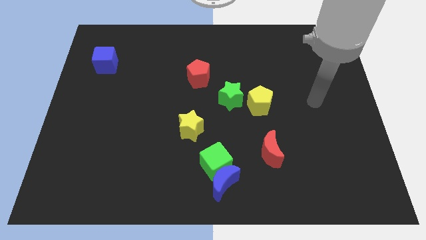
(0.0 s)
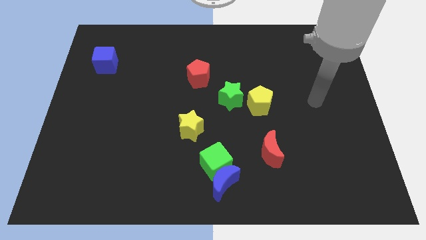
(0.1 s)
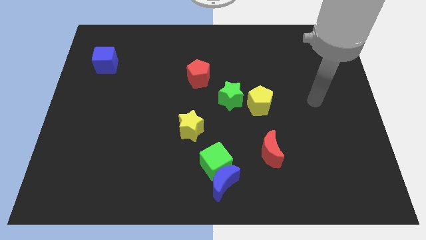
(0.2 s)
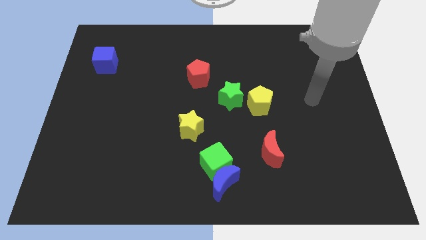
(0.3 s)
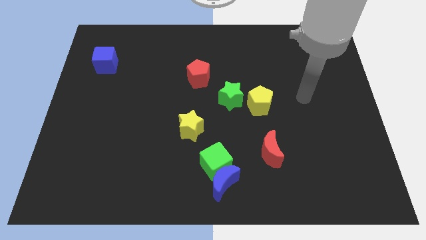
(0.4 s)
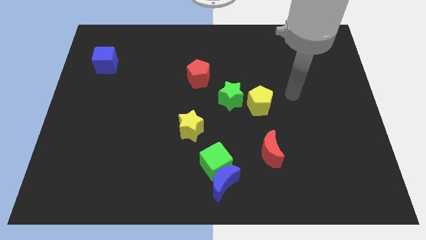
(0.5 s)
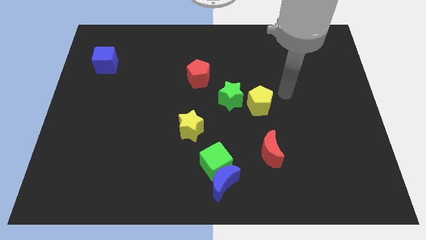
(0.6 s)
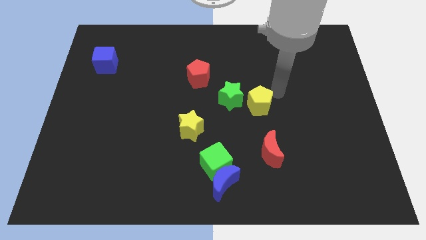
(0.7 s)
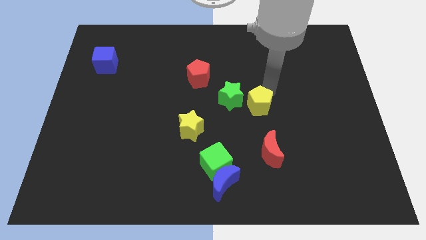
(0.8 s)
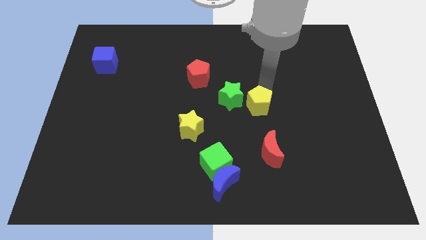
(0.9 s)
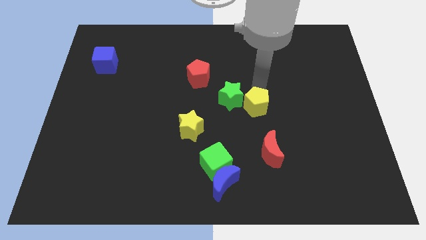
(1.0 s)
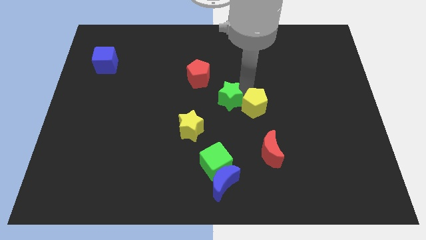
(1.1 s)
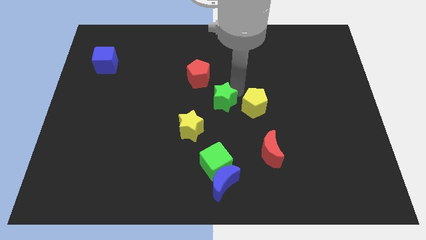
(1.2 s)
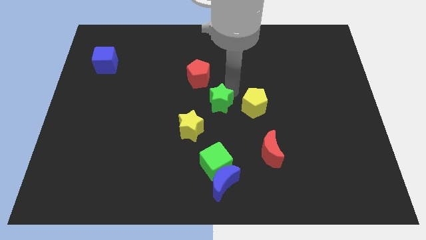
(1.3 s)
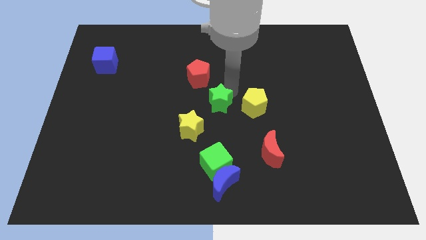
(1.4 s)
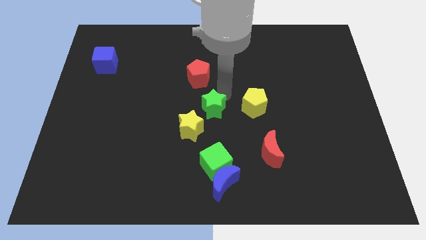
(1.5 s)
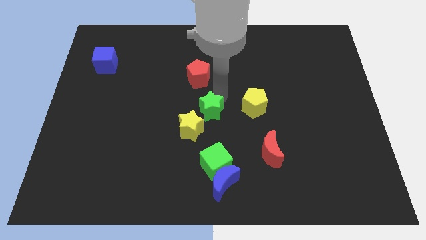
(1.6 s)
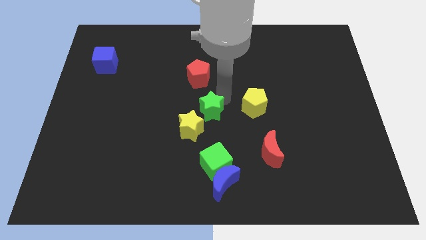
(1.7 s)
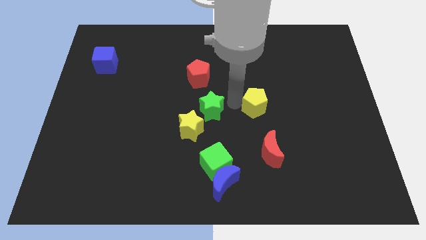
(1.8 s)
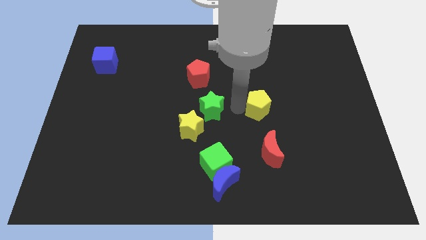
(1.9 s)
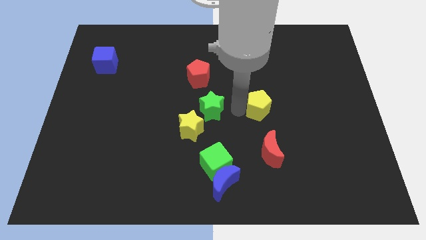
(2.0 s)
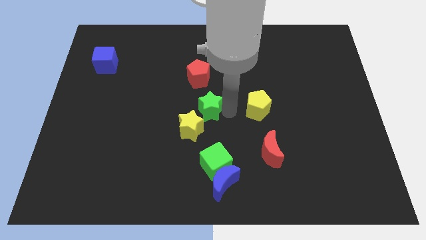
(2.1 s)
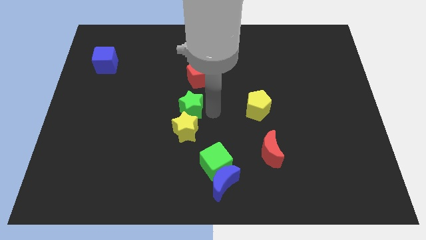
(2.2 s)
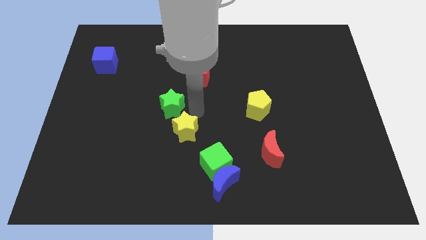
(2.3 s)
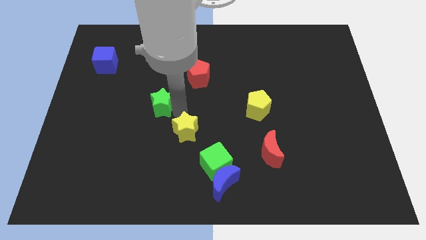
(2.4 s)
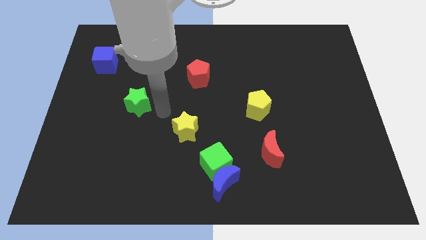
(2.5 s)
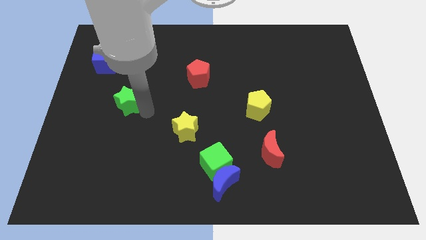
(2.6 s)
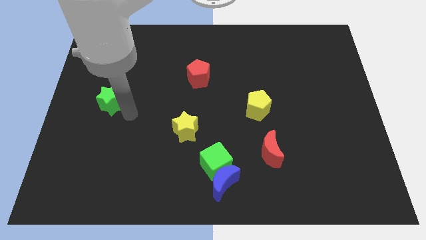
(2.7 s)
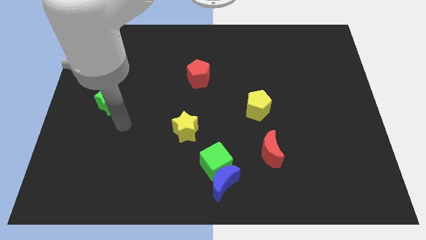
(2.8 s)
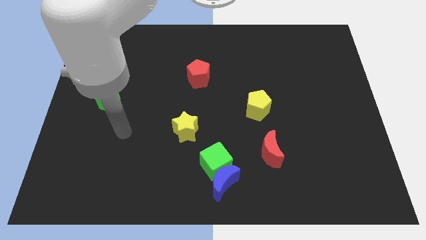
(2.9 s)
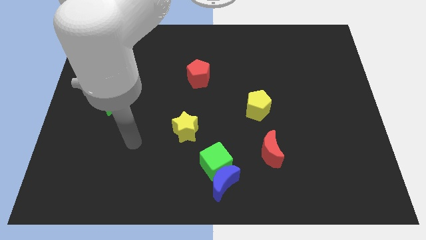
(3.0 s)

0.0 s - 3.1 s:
separate green star from yellow pentagon

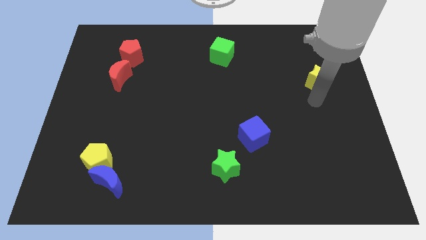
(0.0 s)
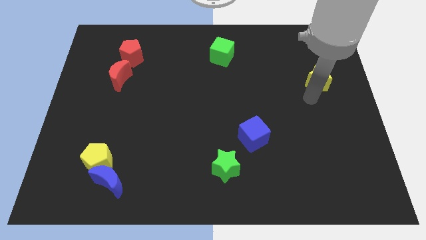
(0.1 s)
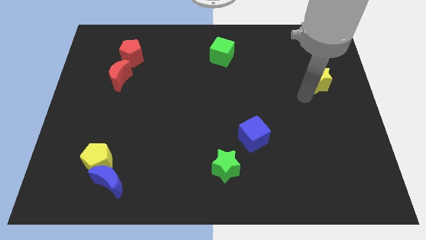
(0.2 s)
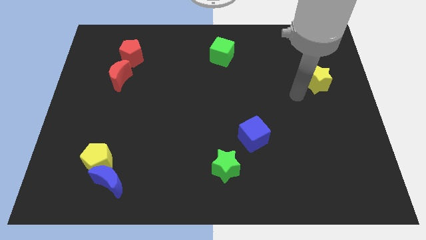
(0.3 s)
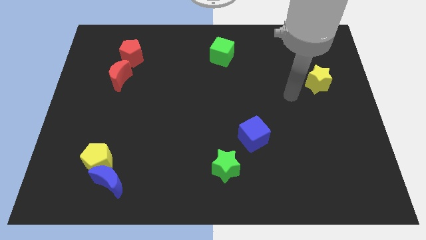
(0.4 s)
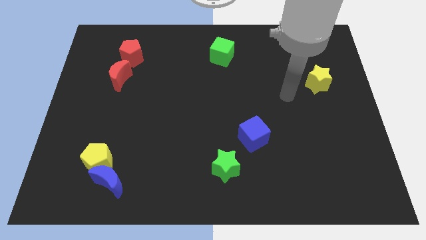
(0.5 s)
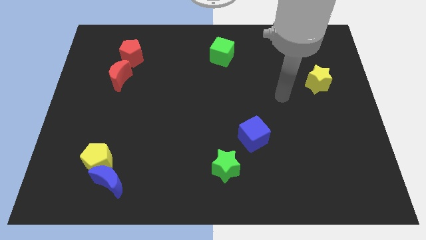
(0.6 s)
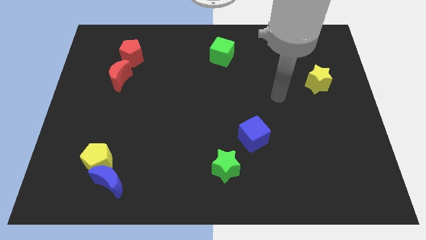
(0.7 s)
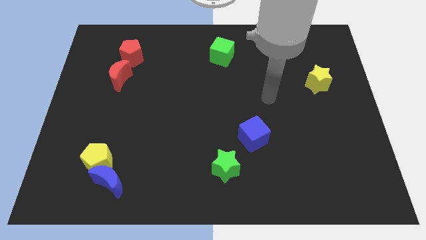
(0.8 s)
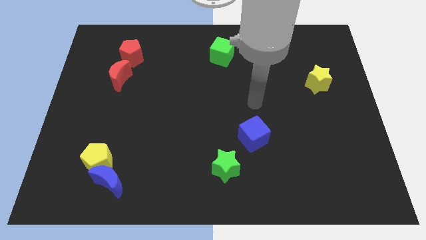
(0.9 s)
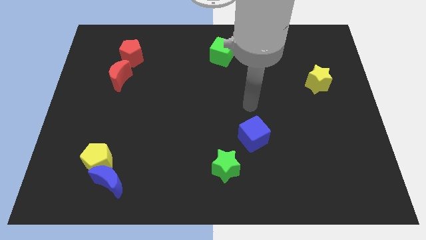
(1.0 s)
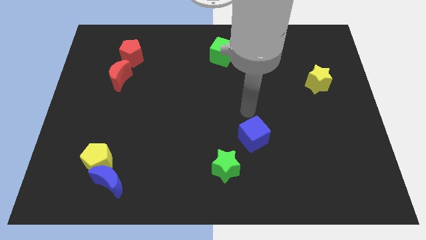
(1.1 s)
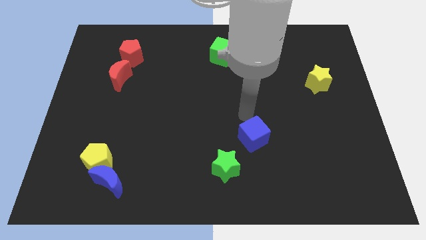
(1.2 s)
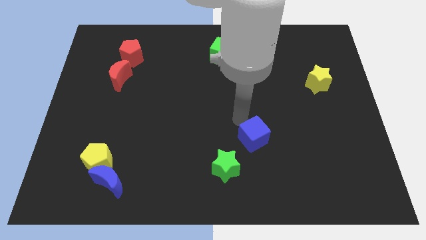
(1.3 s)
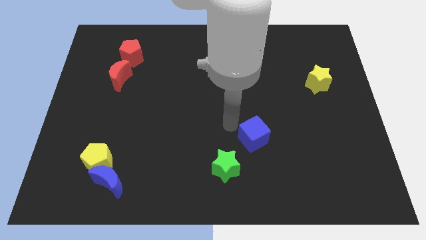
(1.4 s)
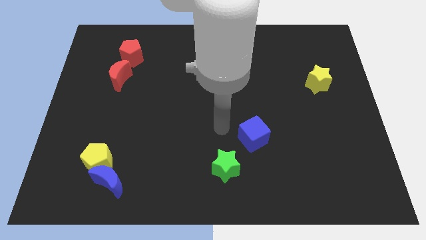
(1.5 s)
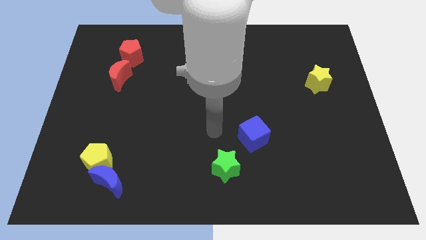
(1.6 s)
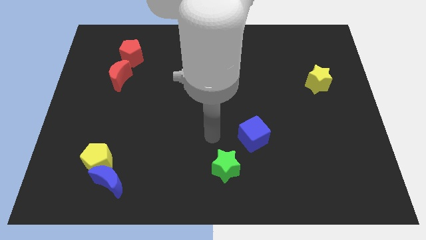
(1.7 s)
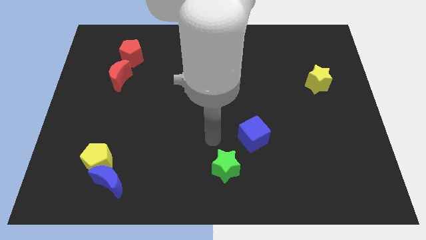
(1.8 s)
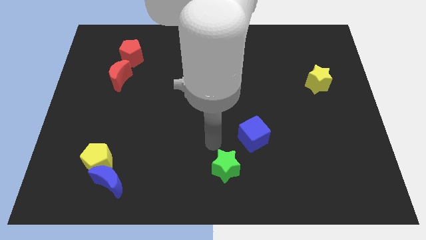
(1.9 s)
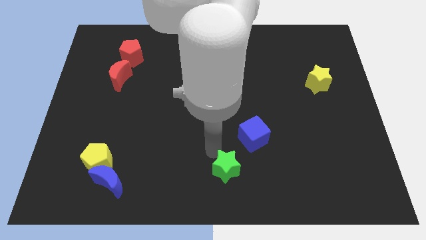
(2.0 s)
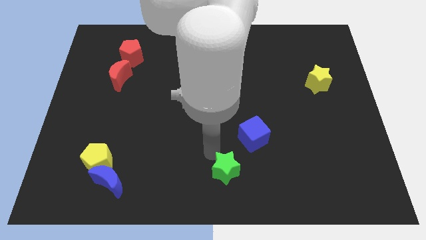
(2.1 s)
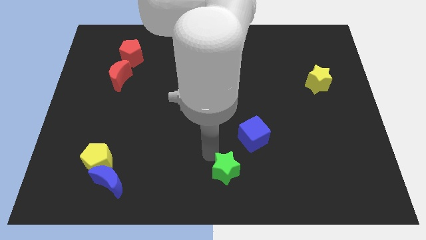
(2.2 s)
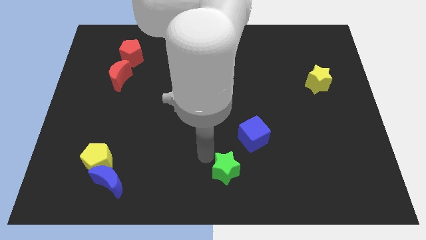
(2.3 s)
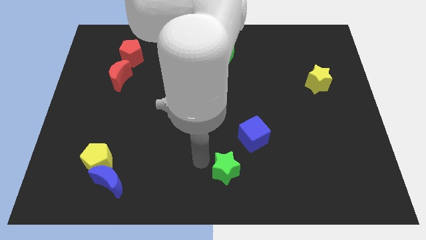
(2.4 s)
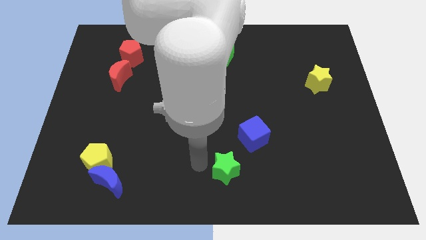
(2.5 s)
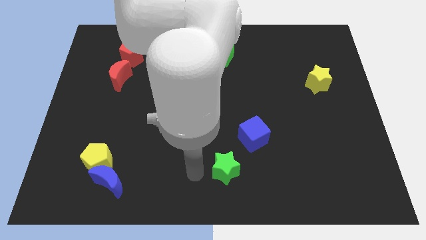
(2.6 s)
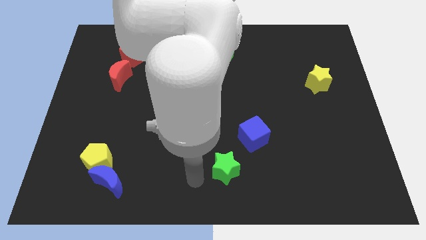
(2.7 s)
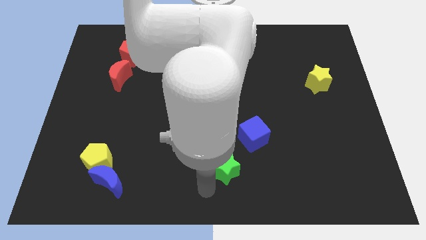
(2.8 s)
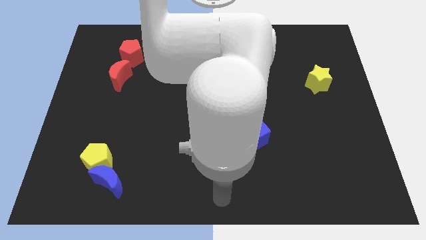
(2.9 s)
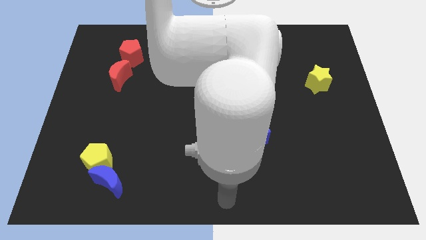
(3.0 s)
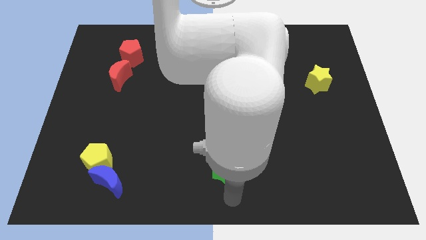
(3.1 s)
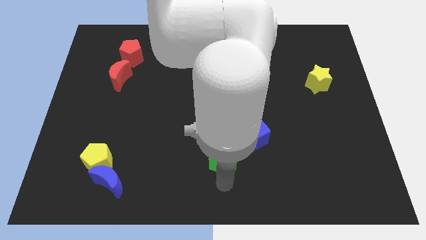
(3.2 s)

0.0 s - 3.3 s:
place the hand at the bottom of the green star

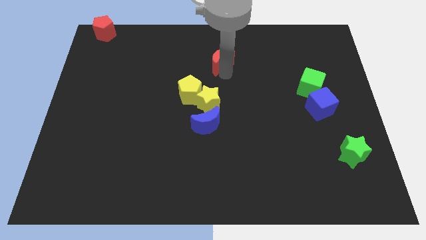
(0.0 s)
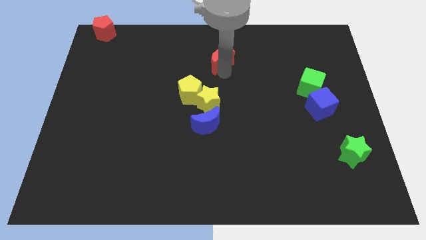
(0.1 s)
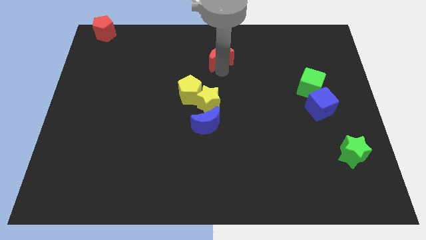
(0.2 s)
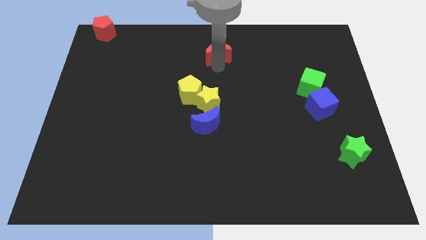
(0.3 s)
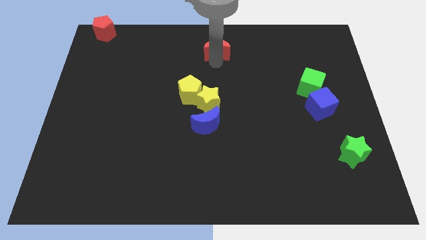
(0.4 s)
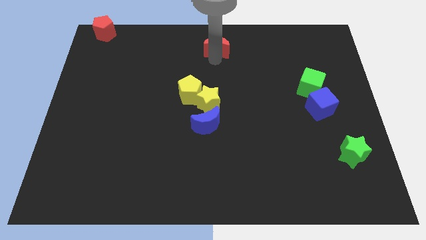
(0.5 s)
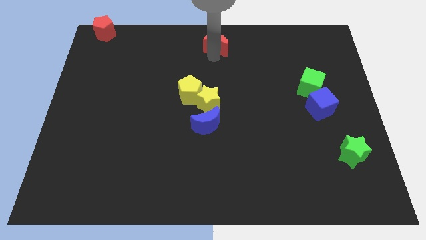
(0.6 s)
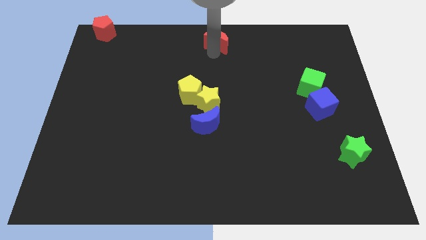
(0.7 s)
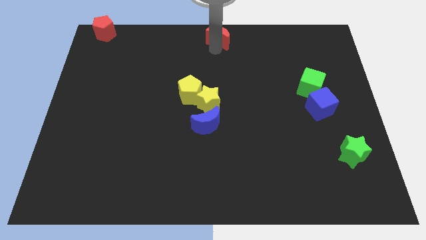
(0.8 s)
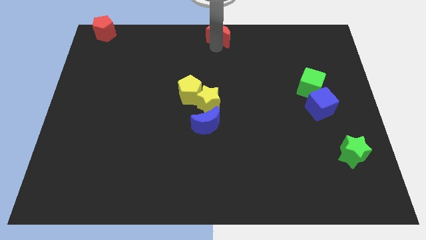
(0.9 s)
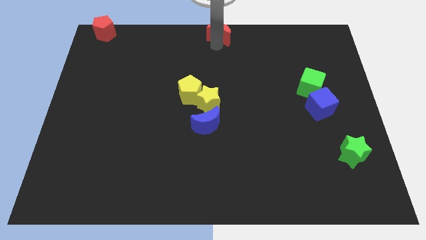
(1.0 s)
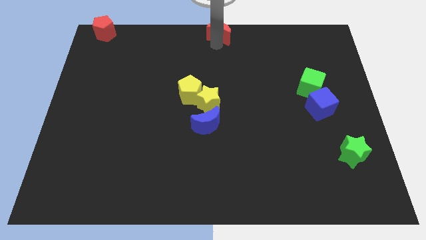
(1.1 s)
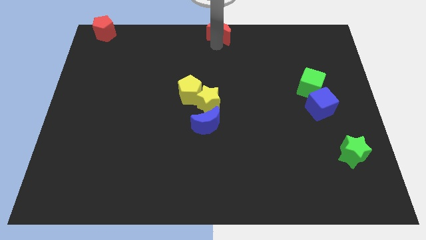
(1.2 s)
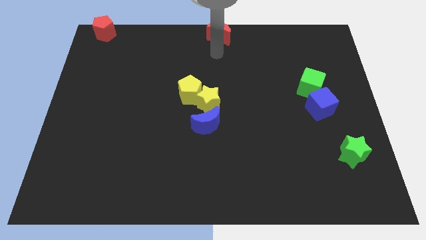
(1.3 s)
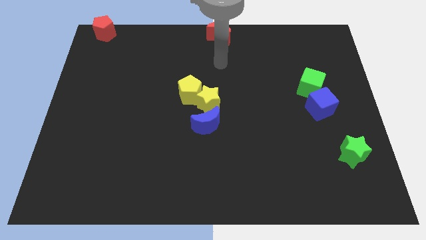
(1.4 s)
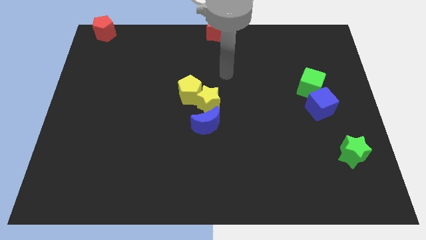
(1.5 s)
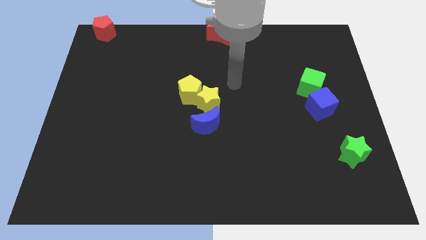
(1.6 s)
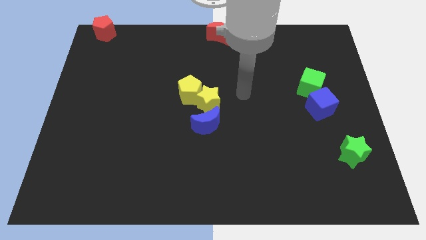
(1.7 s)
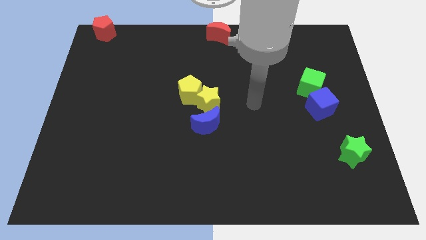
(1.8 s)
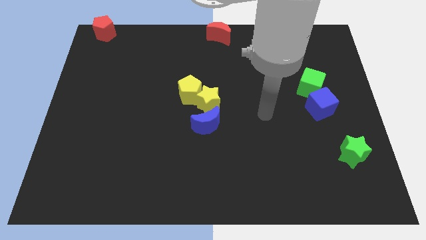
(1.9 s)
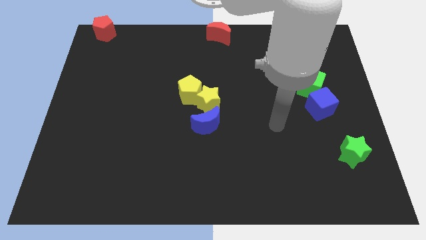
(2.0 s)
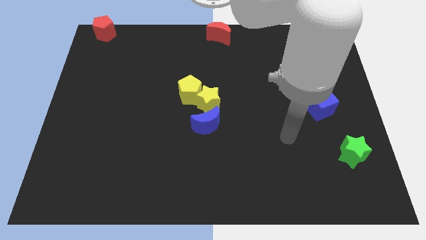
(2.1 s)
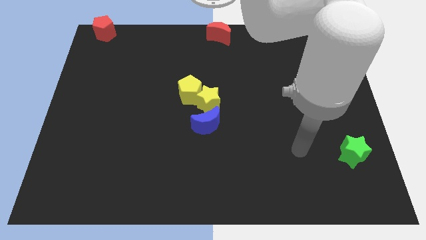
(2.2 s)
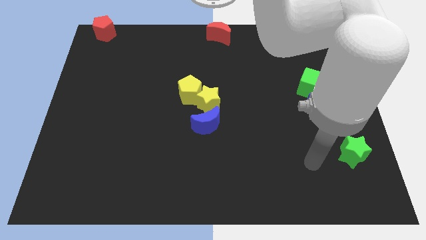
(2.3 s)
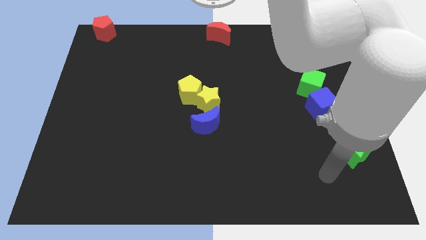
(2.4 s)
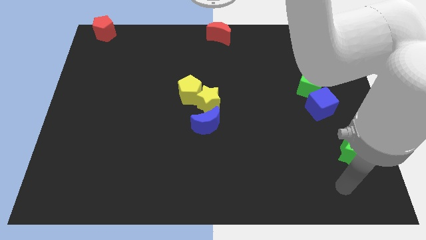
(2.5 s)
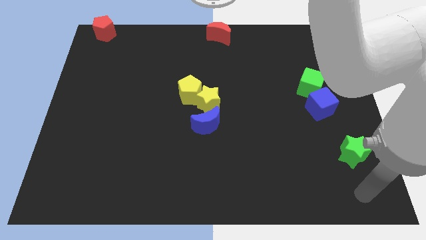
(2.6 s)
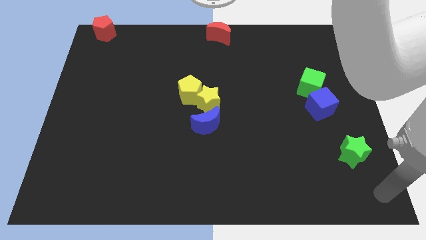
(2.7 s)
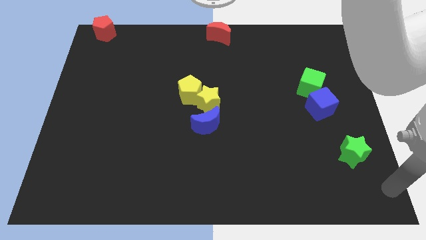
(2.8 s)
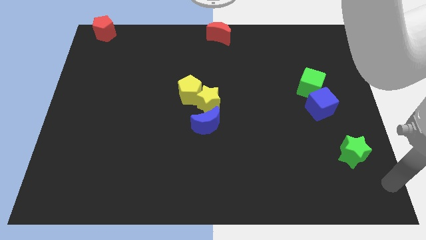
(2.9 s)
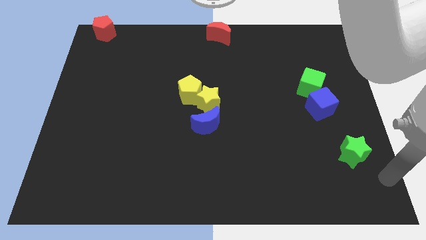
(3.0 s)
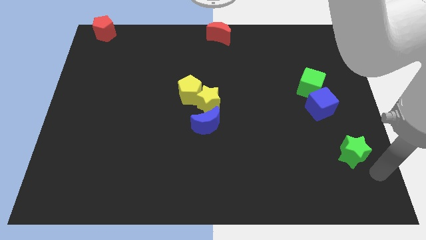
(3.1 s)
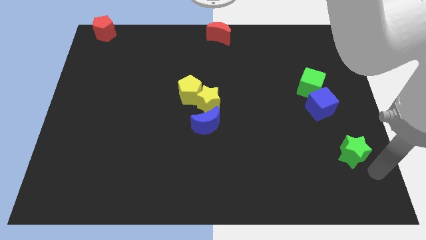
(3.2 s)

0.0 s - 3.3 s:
put the red crescent at the top center
